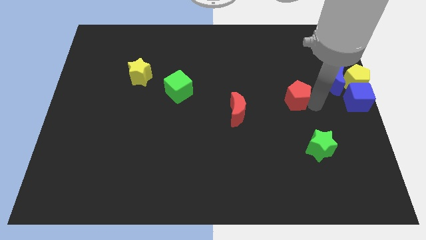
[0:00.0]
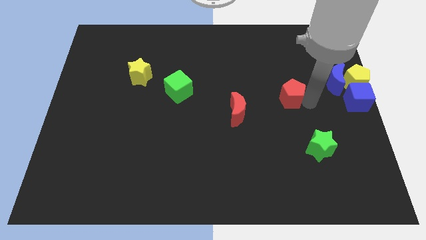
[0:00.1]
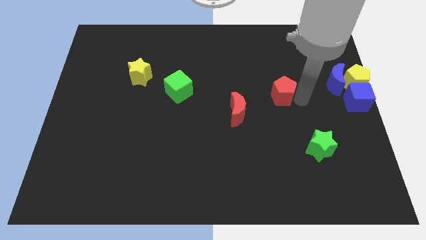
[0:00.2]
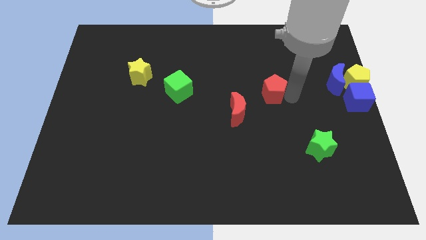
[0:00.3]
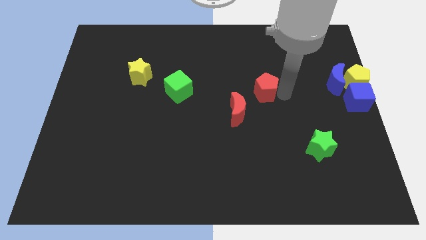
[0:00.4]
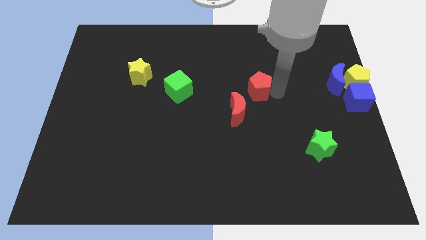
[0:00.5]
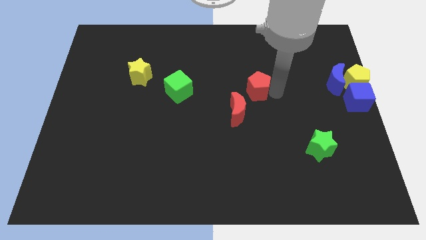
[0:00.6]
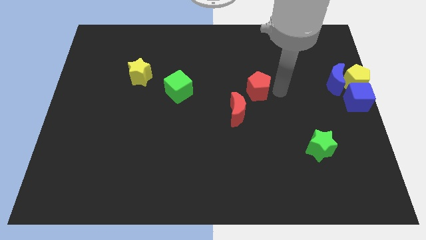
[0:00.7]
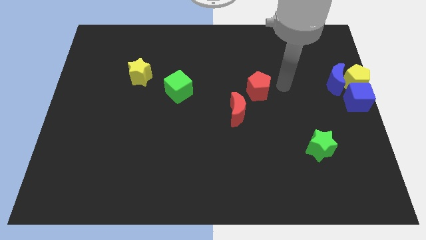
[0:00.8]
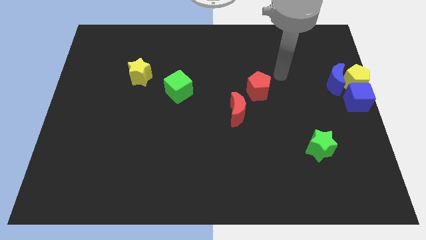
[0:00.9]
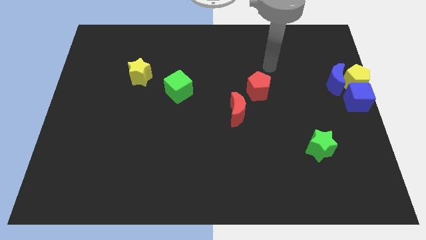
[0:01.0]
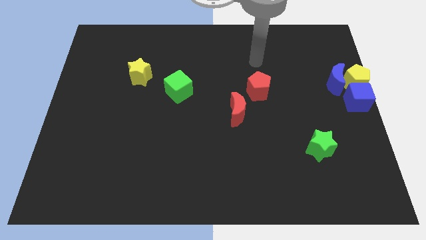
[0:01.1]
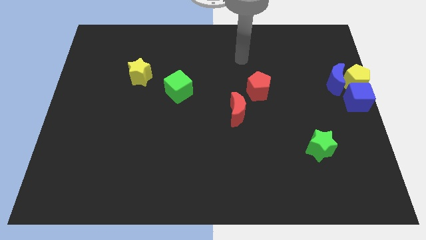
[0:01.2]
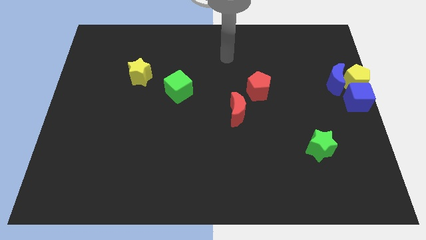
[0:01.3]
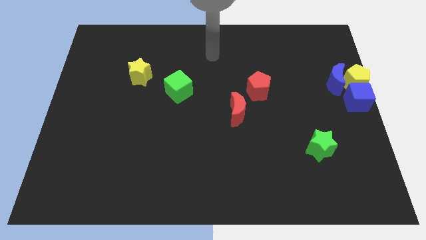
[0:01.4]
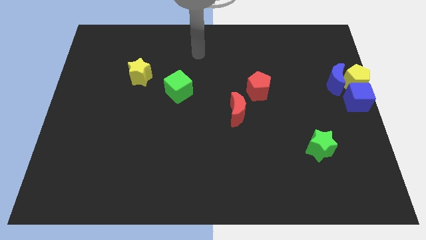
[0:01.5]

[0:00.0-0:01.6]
push the red pentagon above red crescent

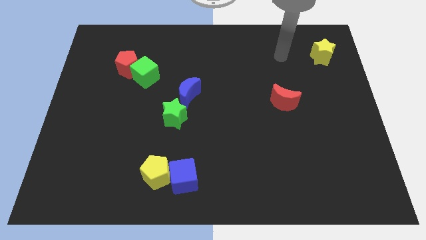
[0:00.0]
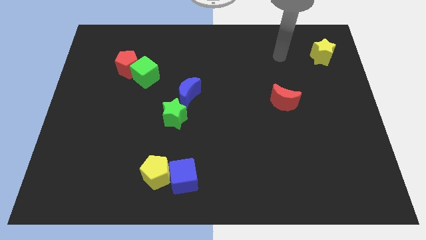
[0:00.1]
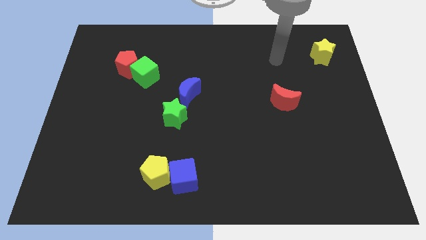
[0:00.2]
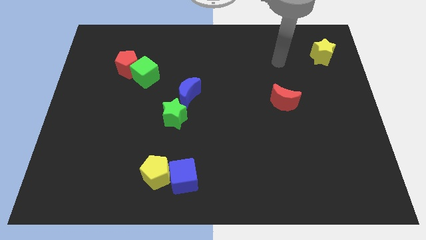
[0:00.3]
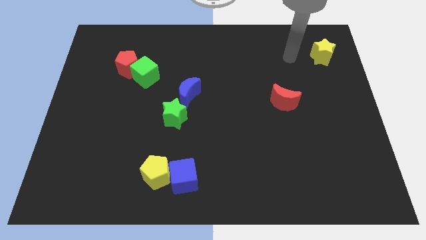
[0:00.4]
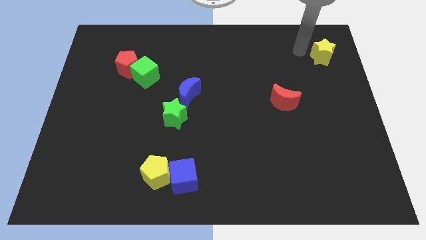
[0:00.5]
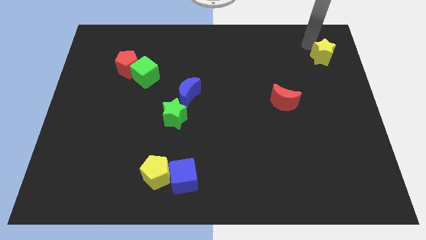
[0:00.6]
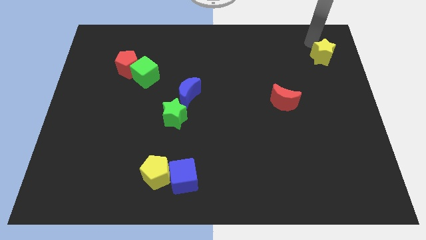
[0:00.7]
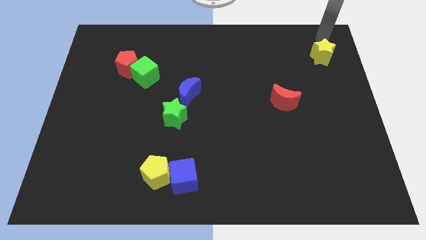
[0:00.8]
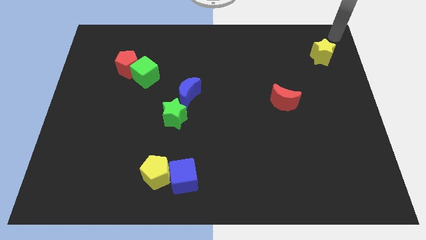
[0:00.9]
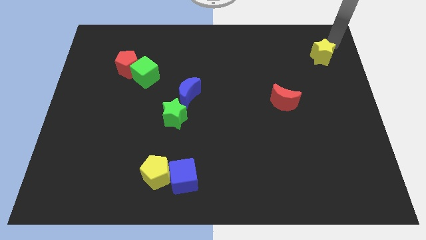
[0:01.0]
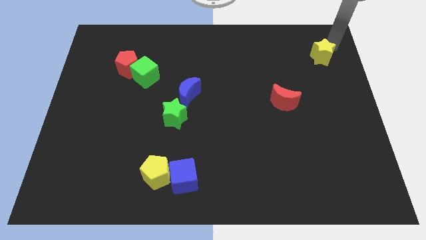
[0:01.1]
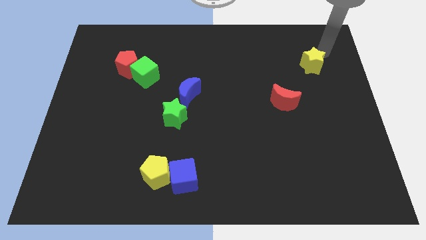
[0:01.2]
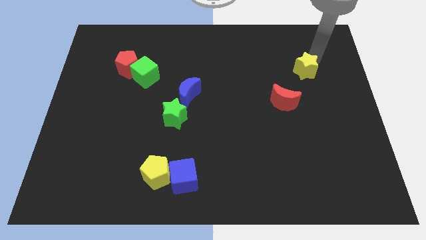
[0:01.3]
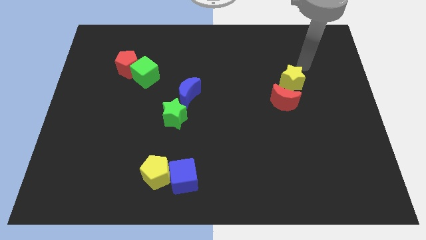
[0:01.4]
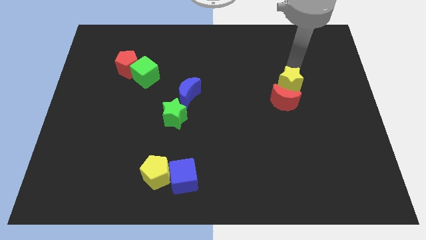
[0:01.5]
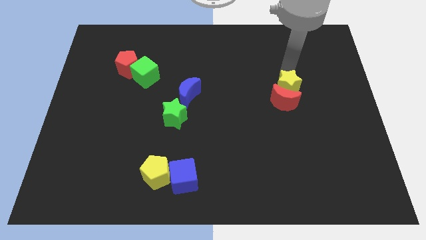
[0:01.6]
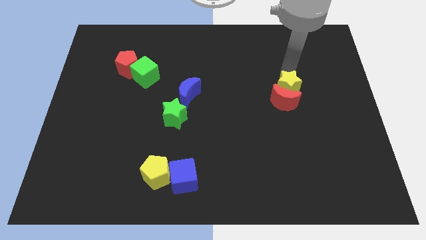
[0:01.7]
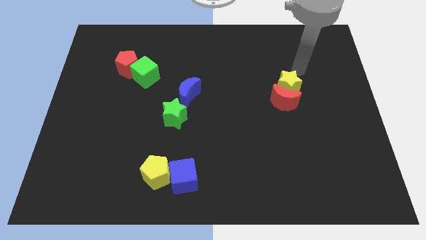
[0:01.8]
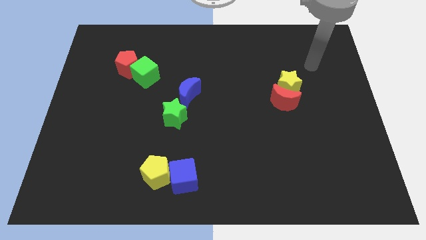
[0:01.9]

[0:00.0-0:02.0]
push the yellow star towards the red crescent

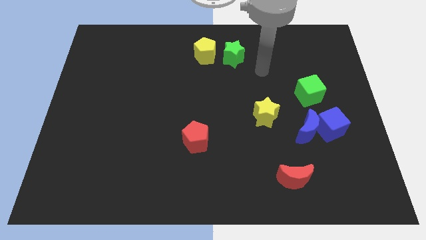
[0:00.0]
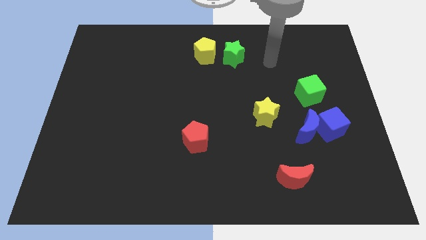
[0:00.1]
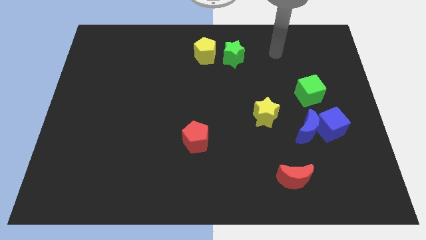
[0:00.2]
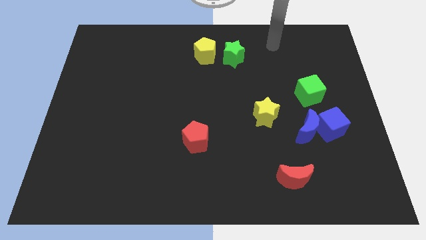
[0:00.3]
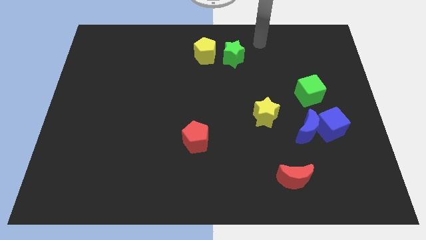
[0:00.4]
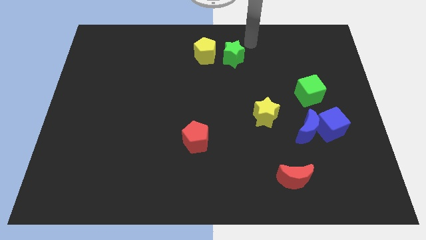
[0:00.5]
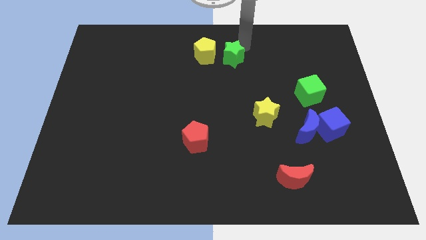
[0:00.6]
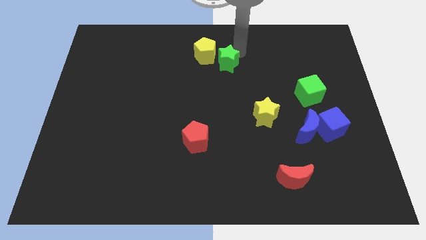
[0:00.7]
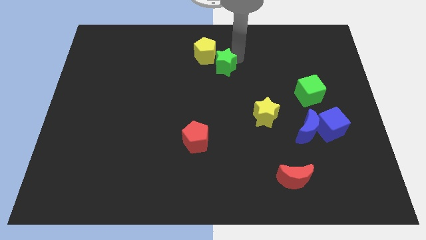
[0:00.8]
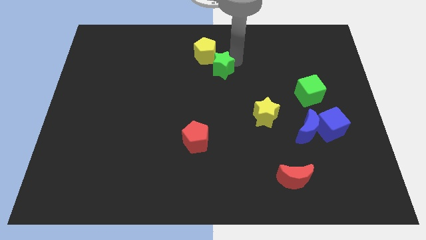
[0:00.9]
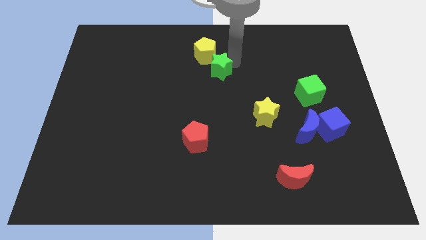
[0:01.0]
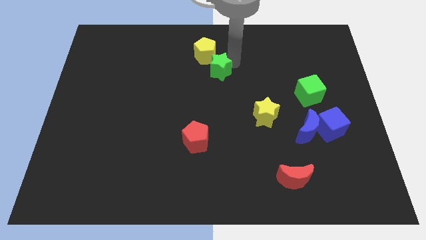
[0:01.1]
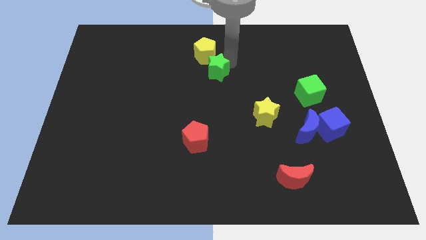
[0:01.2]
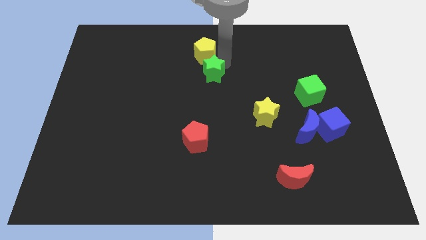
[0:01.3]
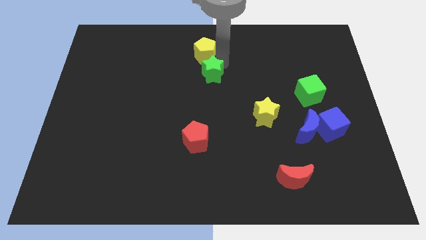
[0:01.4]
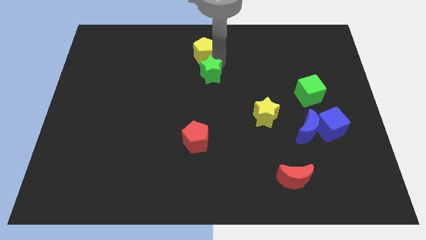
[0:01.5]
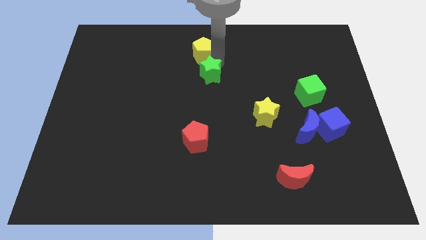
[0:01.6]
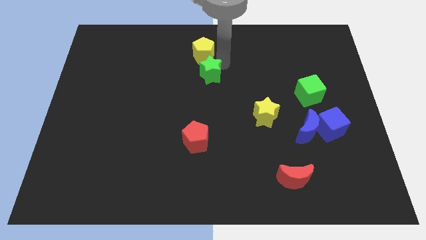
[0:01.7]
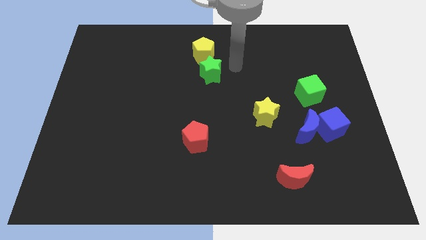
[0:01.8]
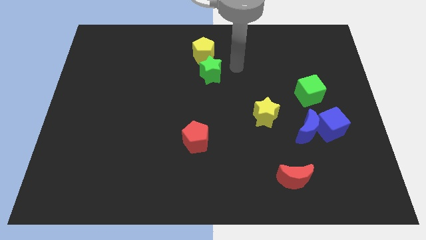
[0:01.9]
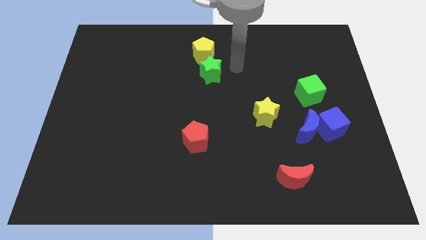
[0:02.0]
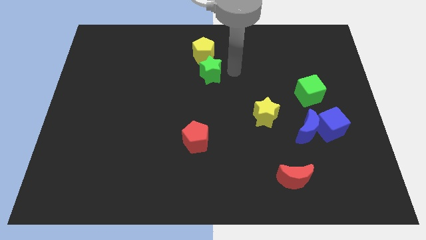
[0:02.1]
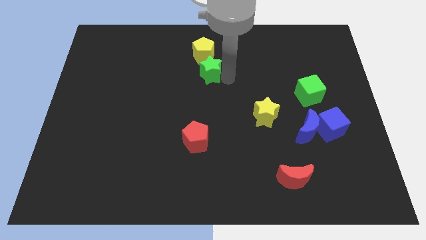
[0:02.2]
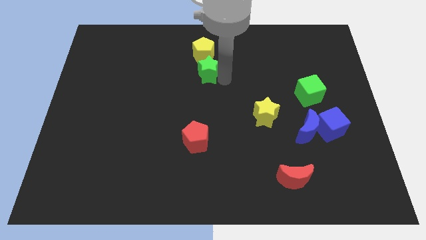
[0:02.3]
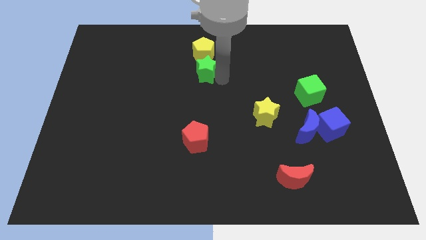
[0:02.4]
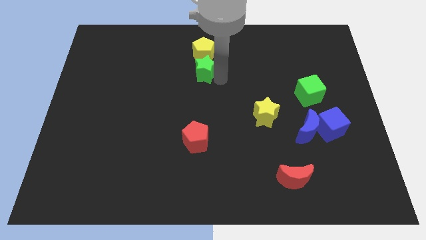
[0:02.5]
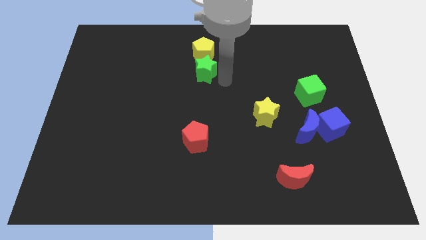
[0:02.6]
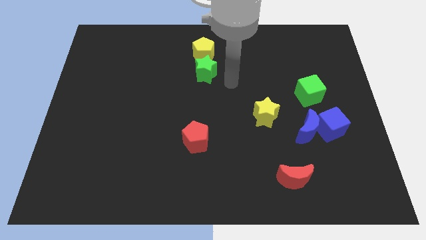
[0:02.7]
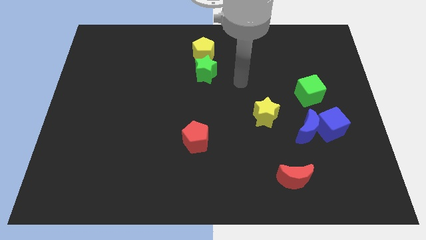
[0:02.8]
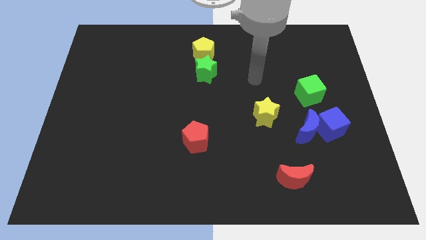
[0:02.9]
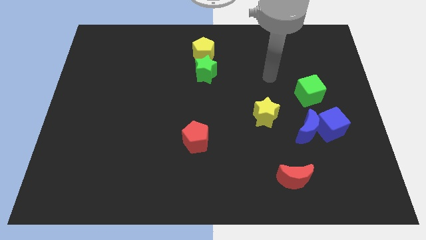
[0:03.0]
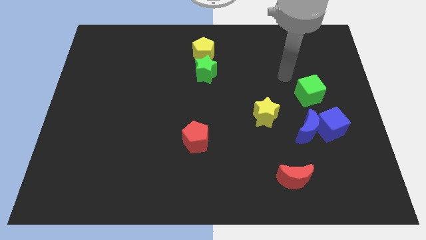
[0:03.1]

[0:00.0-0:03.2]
place the green star to the bottom of the yellow pentagon

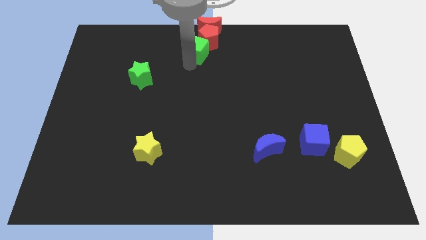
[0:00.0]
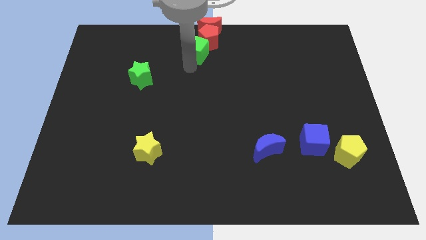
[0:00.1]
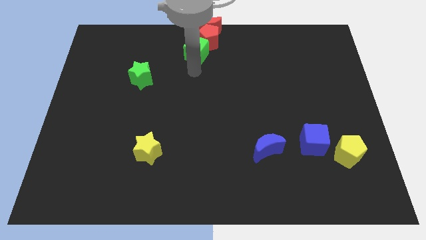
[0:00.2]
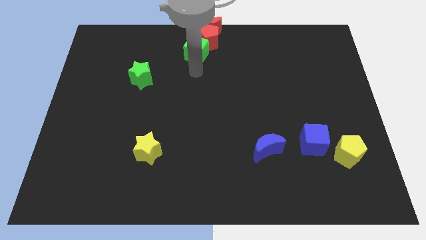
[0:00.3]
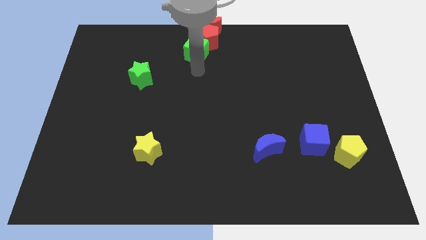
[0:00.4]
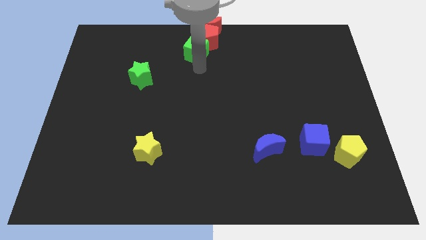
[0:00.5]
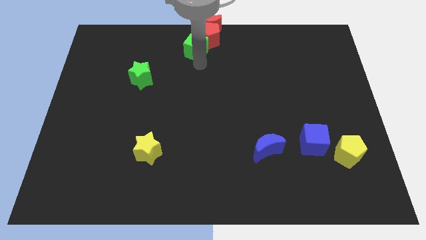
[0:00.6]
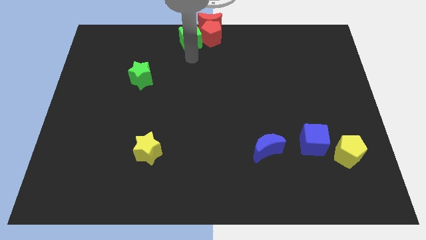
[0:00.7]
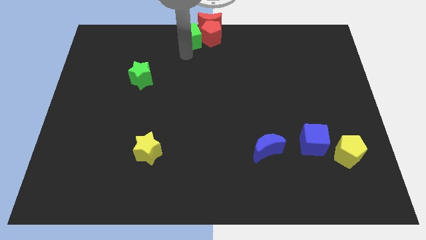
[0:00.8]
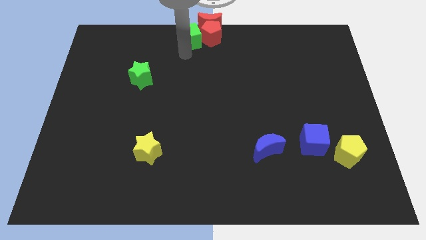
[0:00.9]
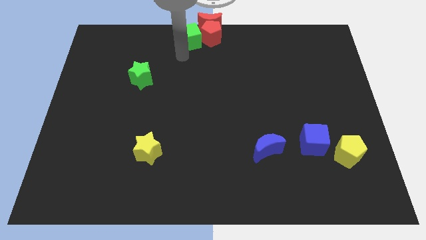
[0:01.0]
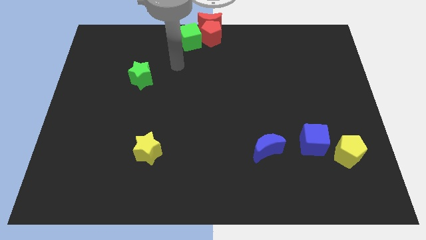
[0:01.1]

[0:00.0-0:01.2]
place green cube on left side of red pentagon

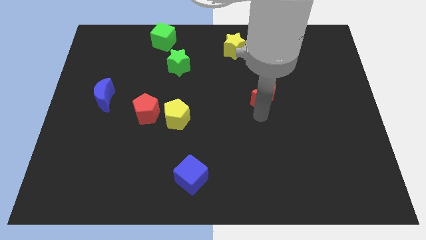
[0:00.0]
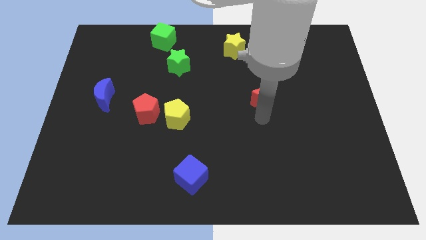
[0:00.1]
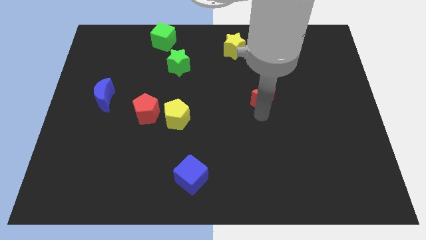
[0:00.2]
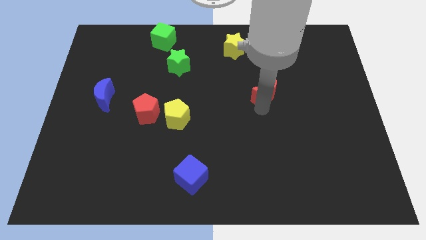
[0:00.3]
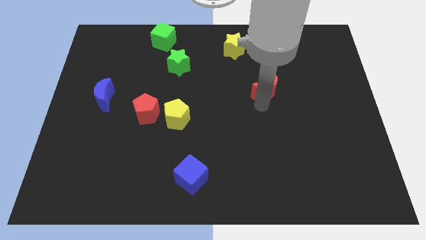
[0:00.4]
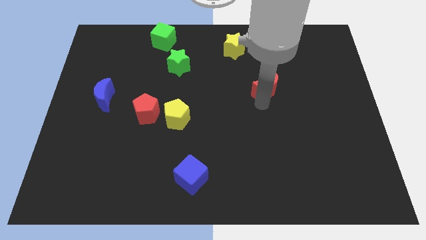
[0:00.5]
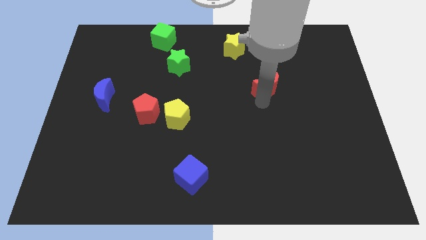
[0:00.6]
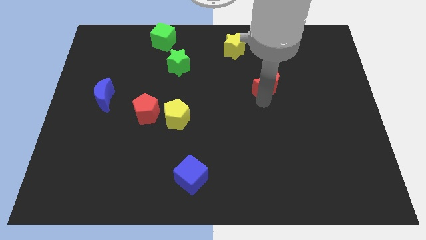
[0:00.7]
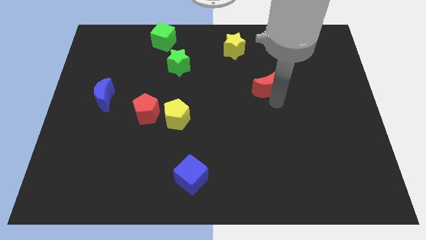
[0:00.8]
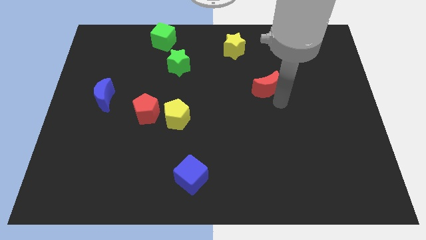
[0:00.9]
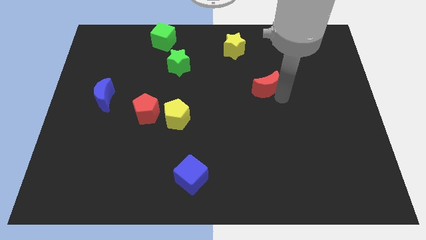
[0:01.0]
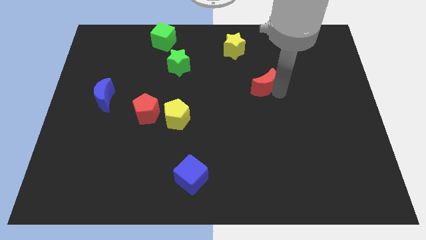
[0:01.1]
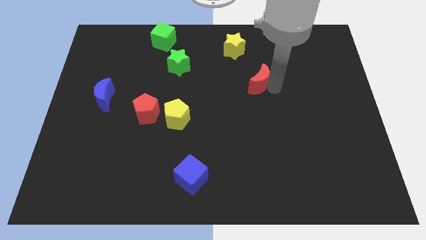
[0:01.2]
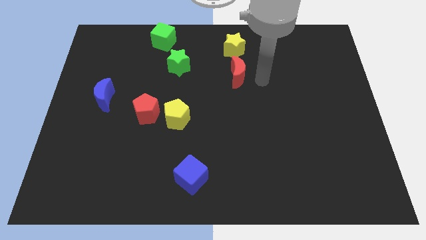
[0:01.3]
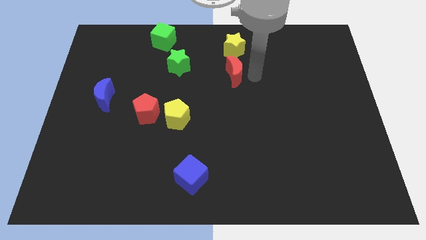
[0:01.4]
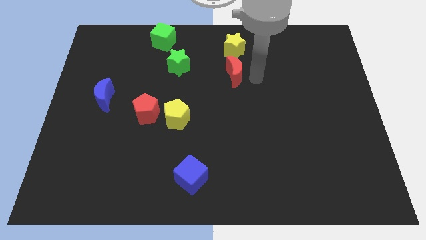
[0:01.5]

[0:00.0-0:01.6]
put the red moon below the yellow star
